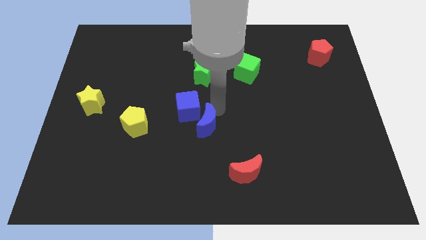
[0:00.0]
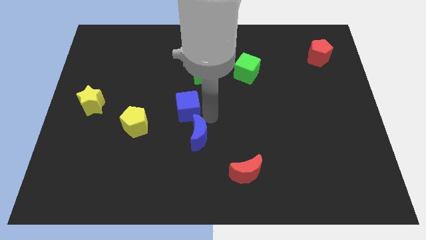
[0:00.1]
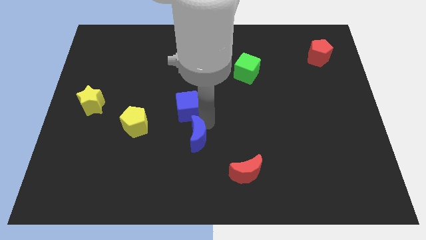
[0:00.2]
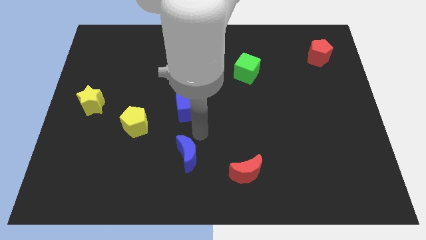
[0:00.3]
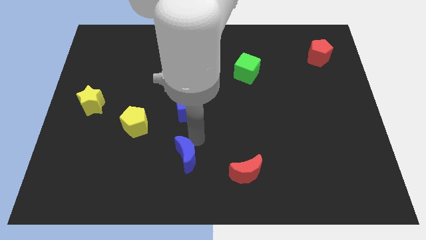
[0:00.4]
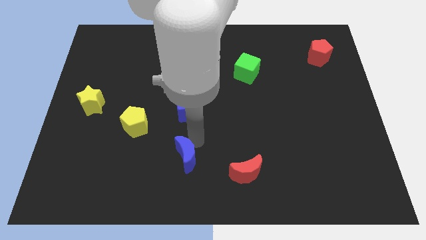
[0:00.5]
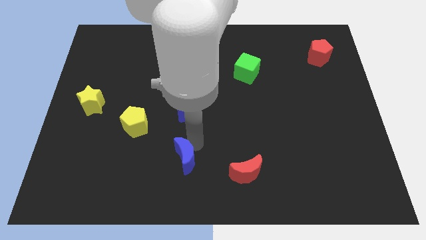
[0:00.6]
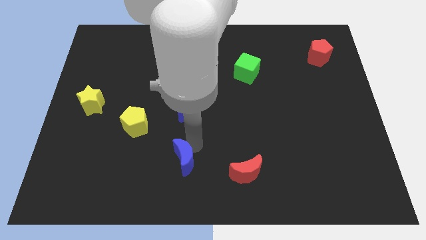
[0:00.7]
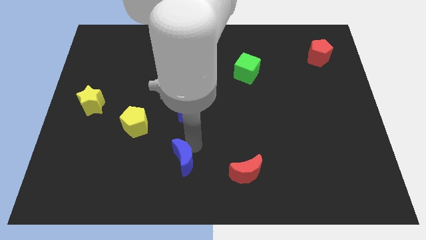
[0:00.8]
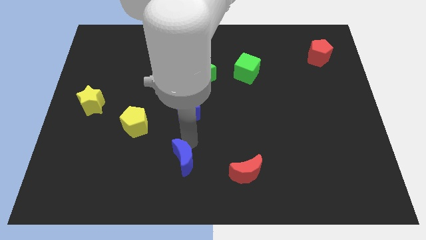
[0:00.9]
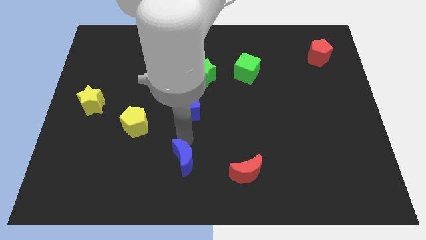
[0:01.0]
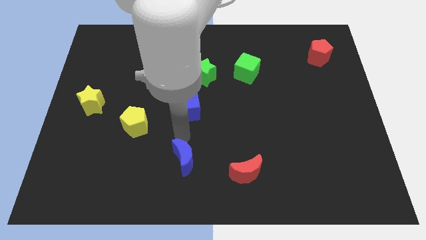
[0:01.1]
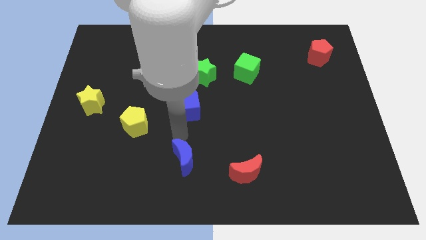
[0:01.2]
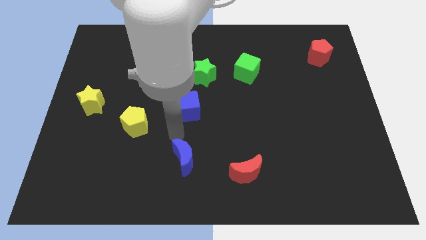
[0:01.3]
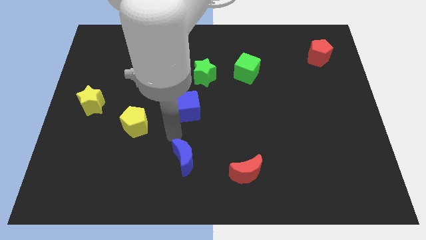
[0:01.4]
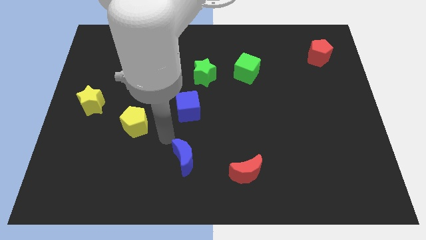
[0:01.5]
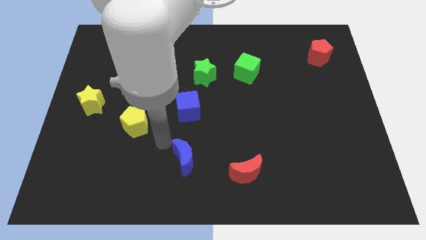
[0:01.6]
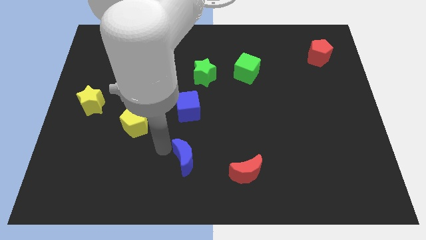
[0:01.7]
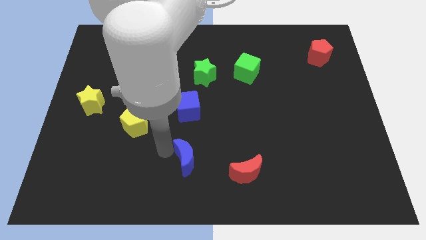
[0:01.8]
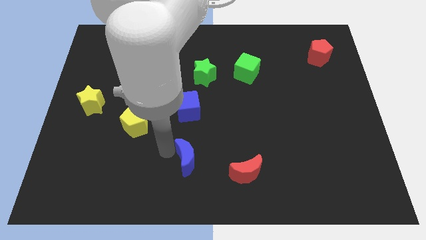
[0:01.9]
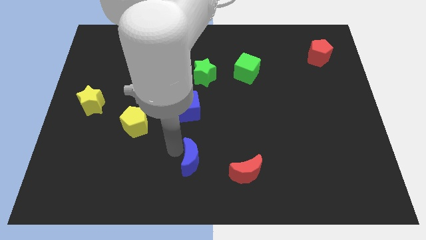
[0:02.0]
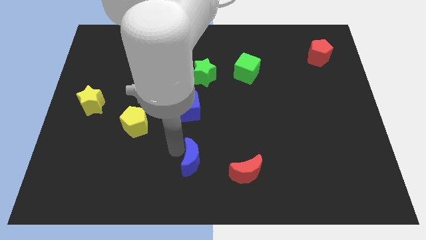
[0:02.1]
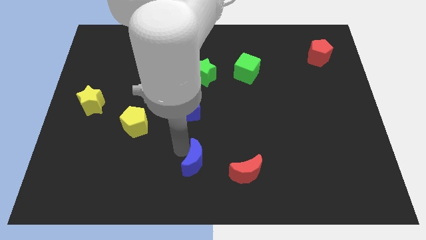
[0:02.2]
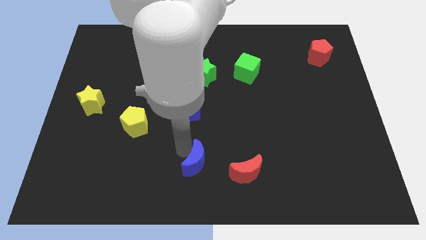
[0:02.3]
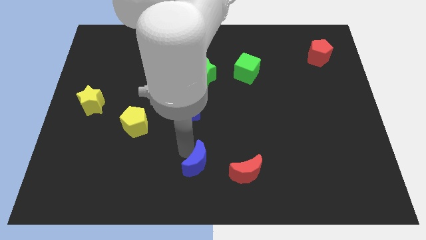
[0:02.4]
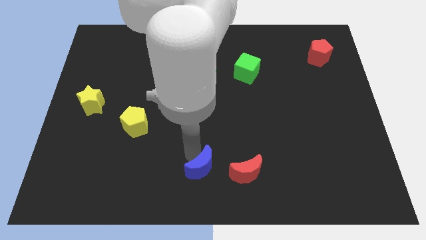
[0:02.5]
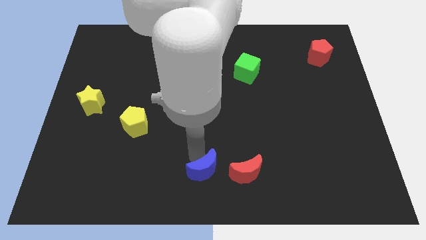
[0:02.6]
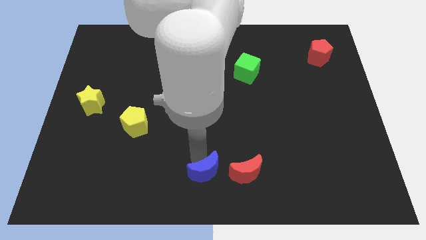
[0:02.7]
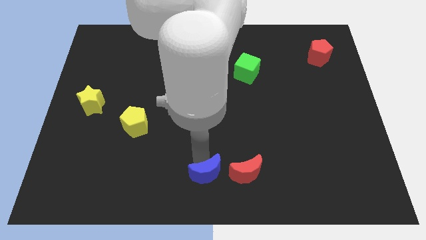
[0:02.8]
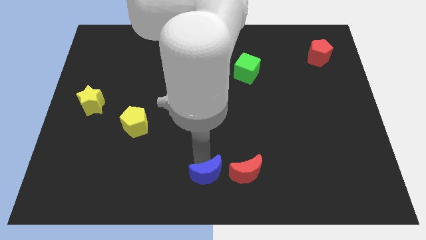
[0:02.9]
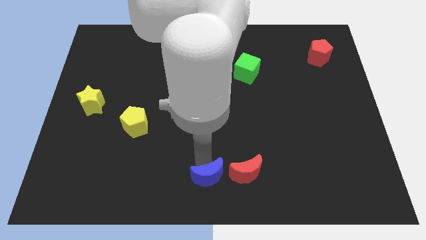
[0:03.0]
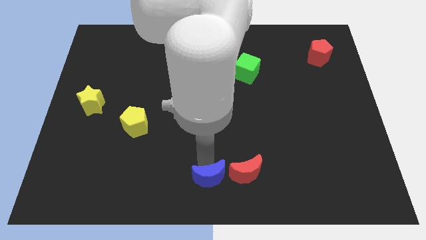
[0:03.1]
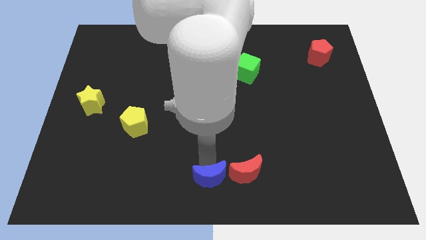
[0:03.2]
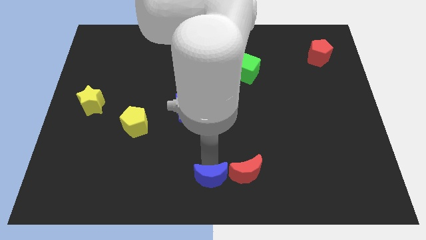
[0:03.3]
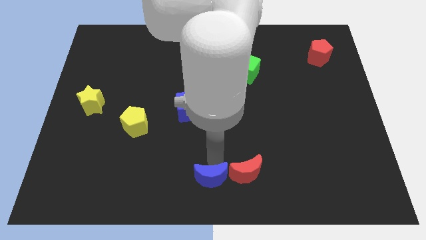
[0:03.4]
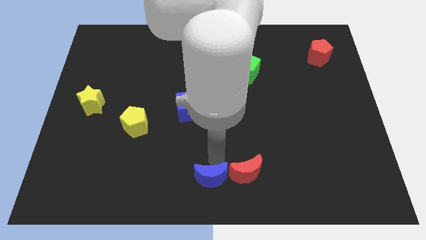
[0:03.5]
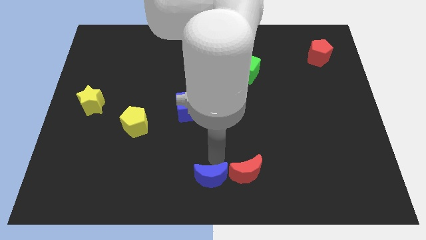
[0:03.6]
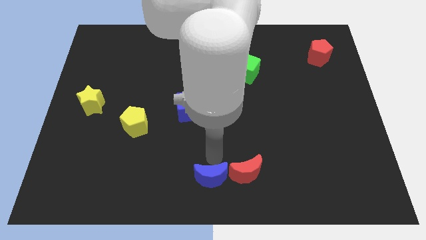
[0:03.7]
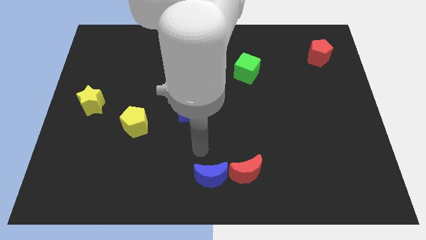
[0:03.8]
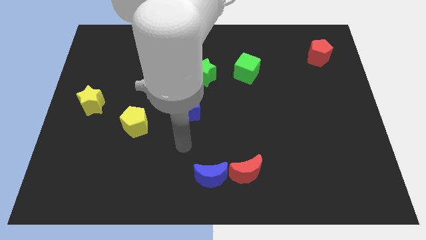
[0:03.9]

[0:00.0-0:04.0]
place the blue moon beside the red moon

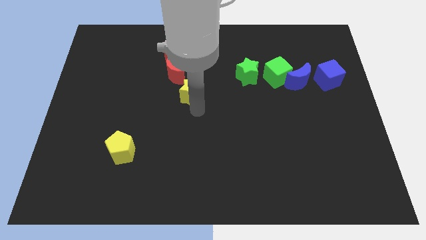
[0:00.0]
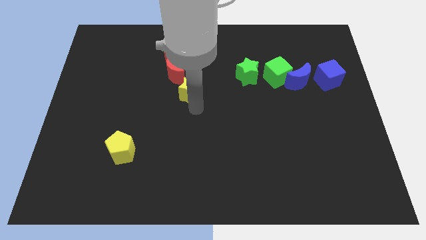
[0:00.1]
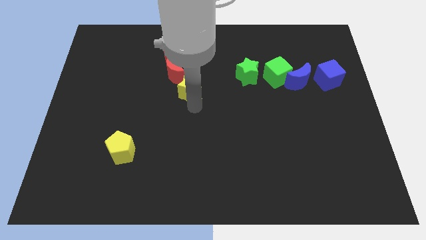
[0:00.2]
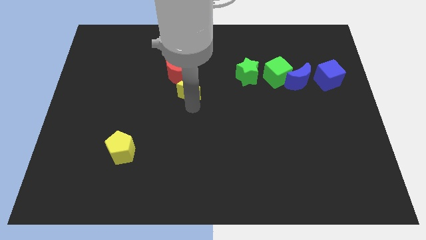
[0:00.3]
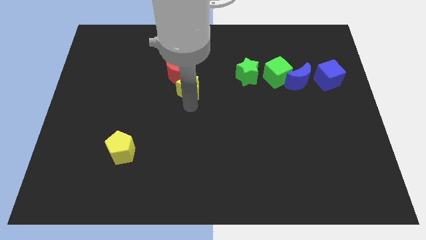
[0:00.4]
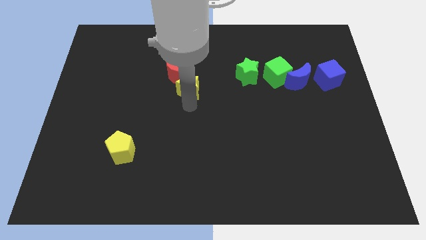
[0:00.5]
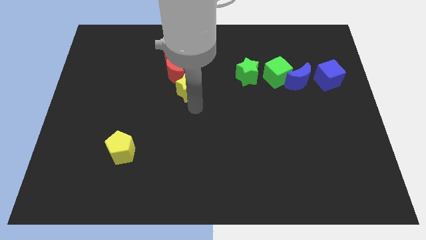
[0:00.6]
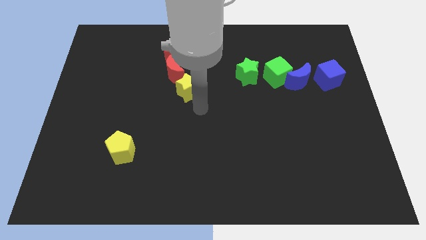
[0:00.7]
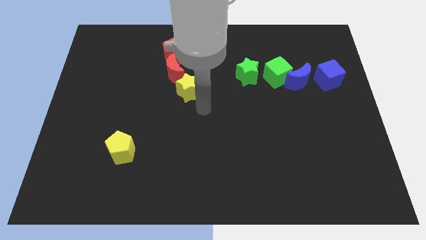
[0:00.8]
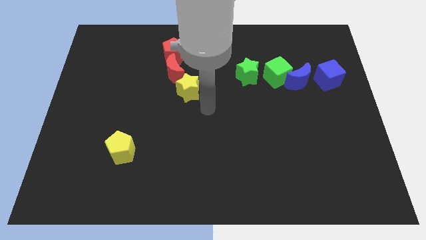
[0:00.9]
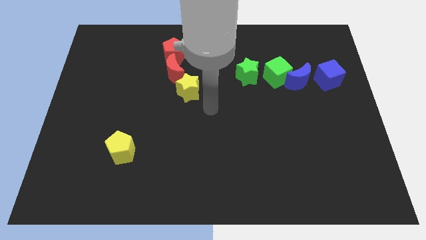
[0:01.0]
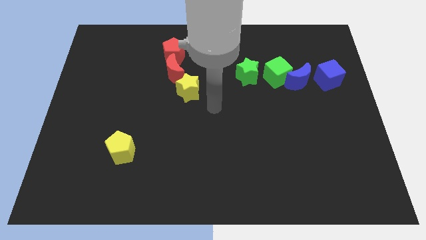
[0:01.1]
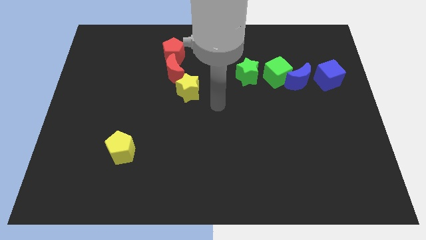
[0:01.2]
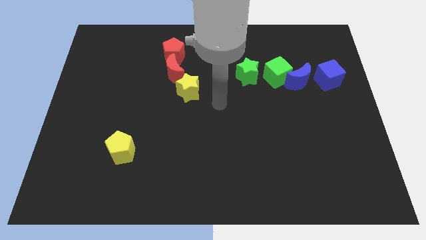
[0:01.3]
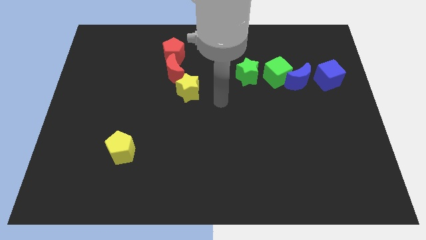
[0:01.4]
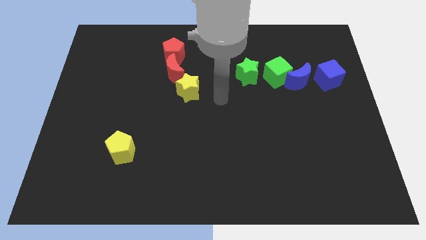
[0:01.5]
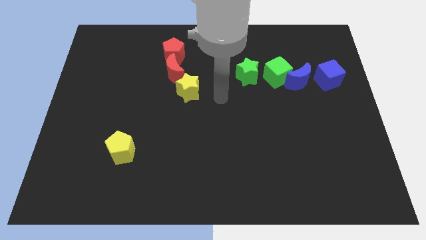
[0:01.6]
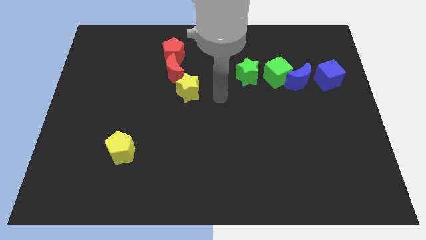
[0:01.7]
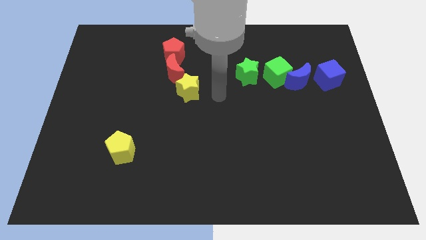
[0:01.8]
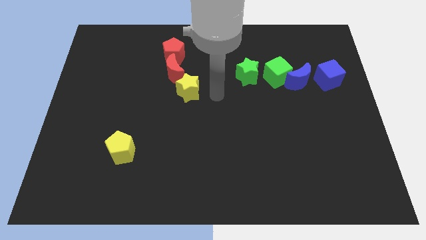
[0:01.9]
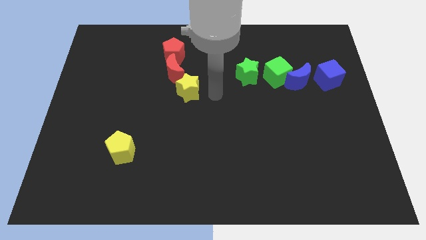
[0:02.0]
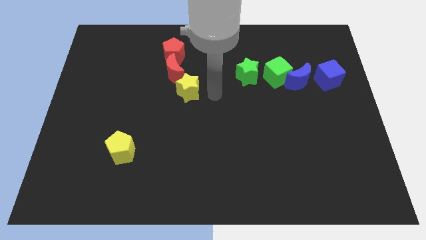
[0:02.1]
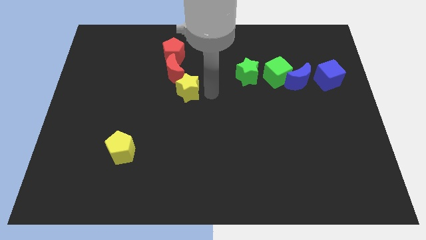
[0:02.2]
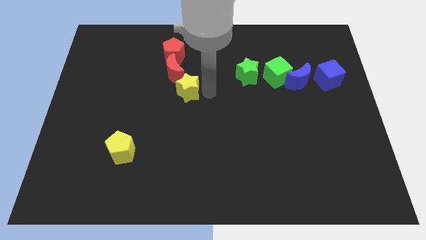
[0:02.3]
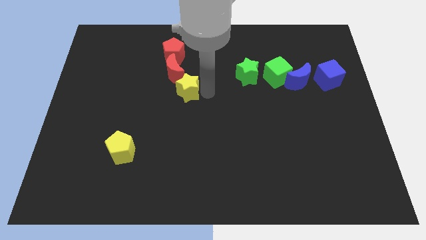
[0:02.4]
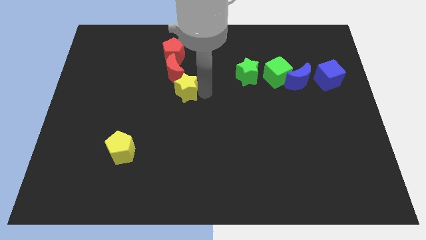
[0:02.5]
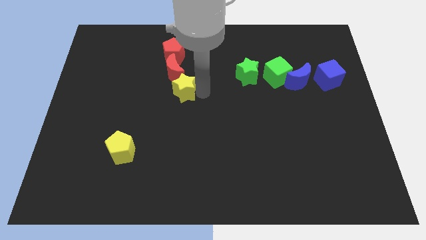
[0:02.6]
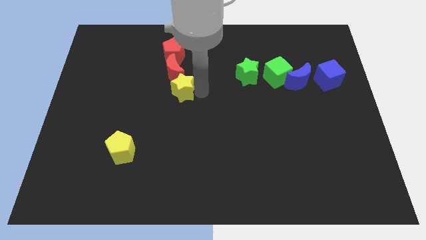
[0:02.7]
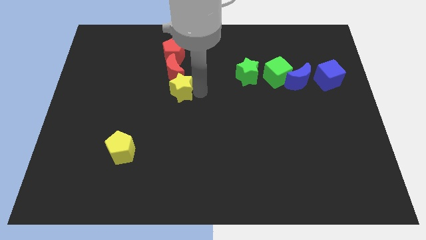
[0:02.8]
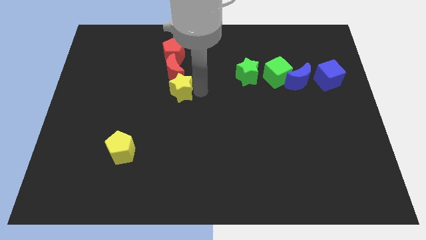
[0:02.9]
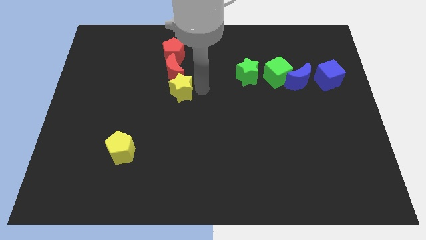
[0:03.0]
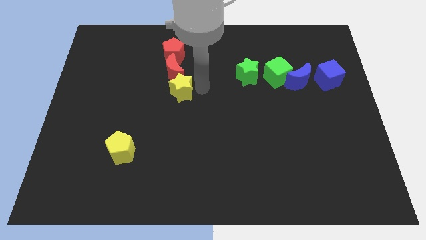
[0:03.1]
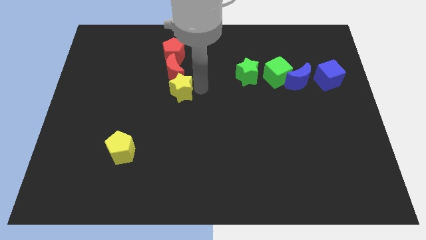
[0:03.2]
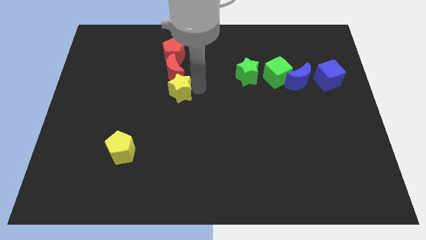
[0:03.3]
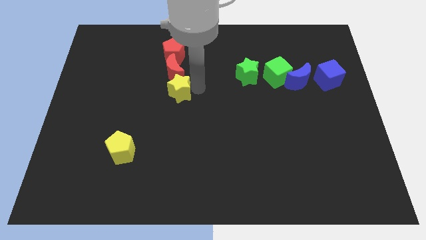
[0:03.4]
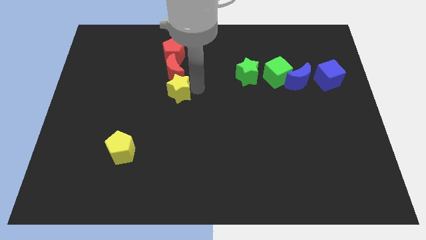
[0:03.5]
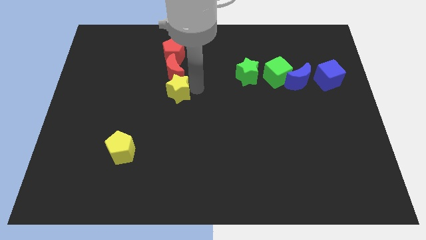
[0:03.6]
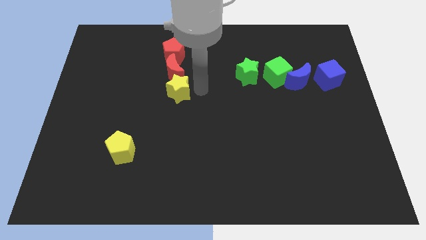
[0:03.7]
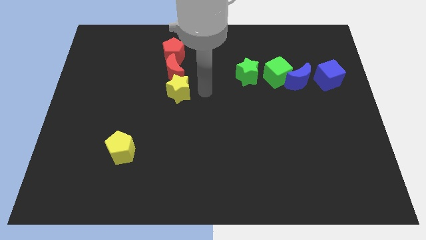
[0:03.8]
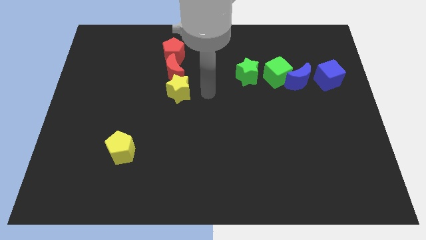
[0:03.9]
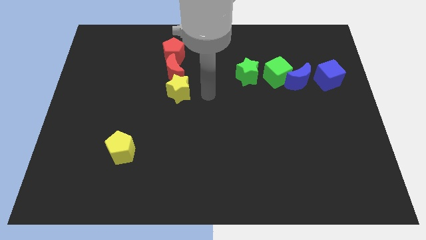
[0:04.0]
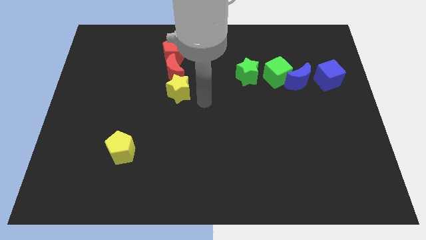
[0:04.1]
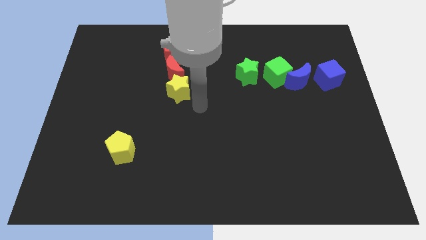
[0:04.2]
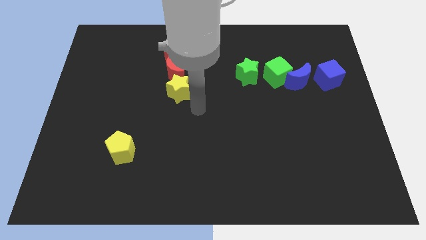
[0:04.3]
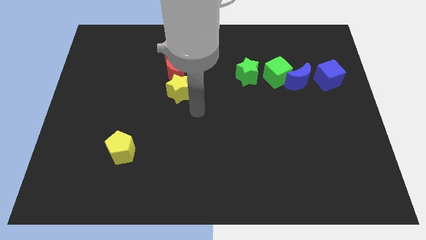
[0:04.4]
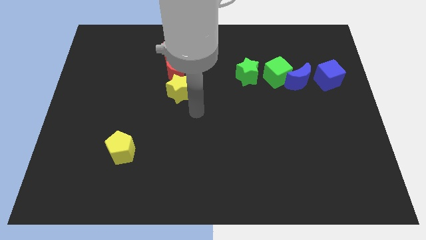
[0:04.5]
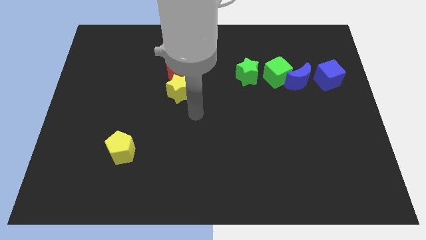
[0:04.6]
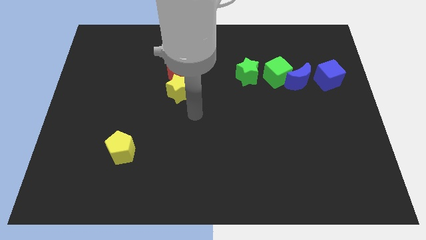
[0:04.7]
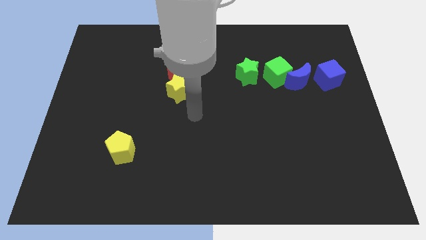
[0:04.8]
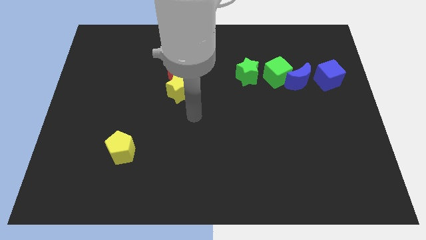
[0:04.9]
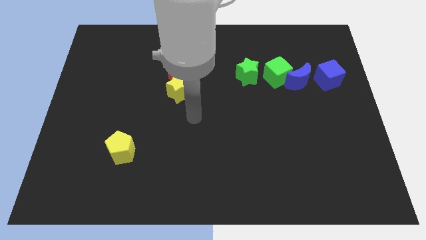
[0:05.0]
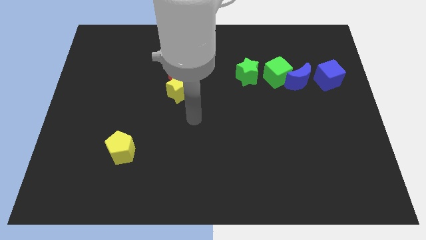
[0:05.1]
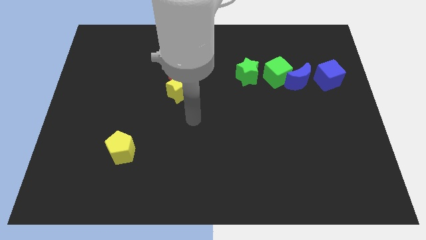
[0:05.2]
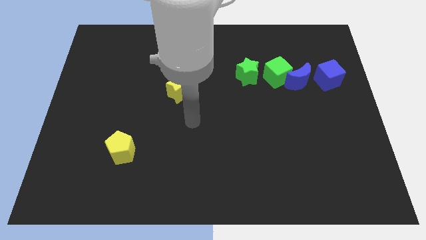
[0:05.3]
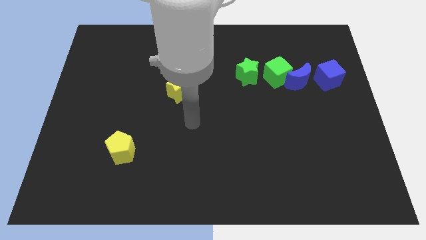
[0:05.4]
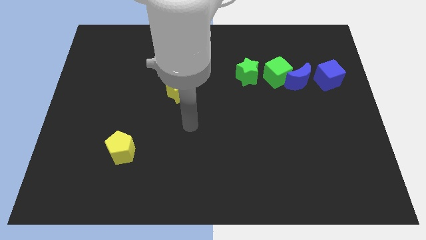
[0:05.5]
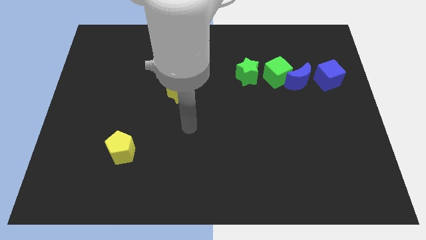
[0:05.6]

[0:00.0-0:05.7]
push the yellow star close to the red moon
